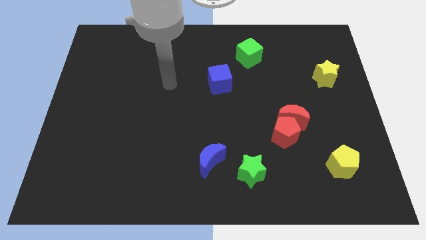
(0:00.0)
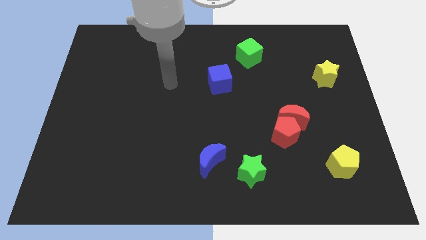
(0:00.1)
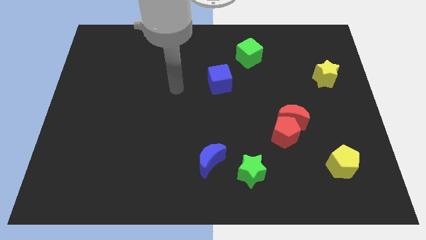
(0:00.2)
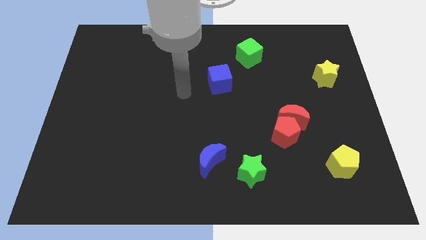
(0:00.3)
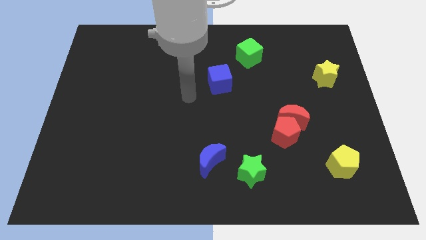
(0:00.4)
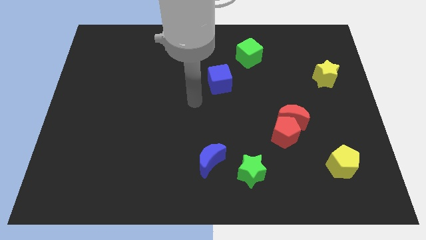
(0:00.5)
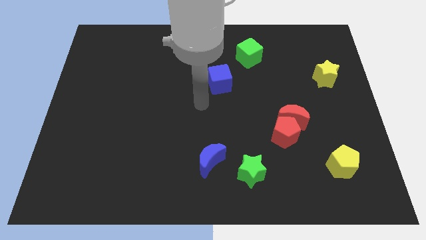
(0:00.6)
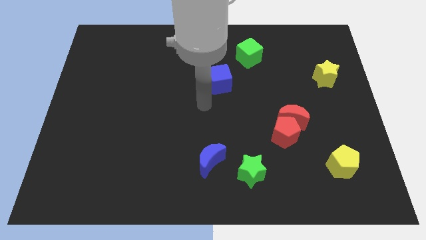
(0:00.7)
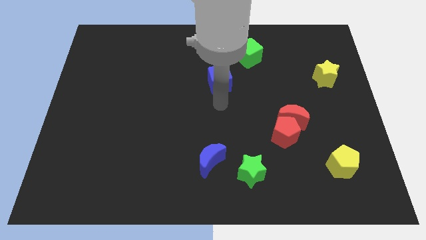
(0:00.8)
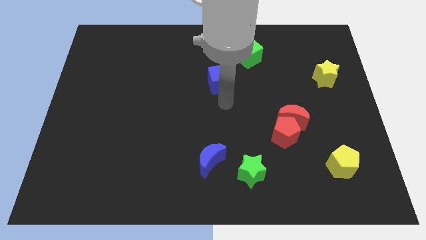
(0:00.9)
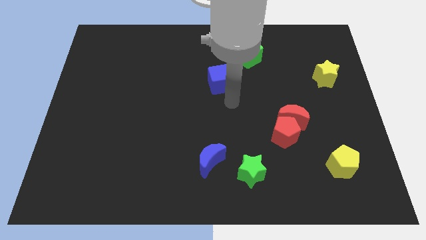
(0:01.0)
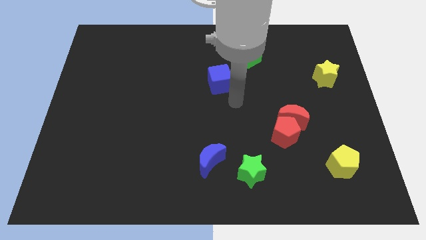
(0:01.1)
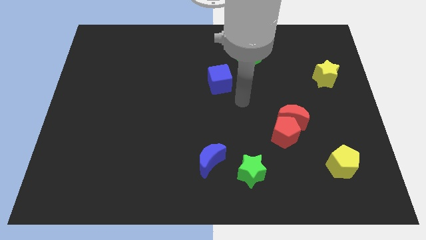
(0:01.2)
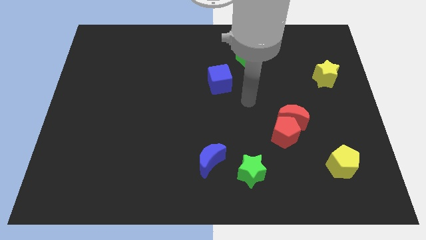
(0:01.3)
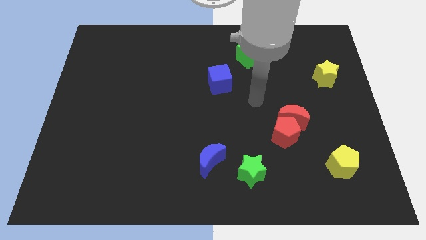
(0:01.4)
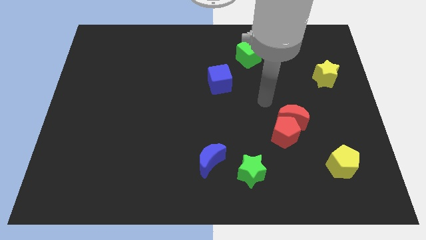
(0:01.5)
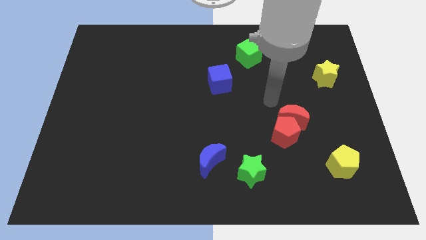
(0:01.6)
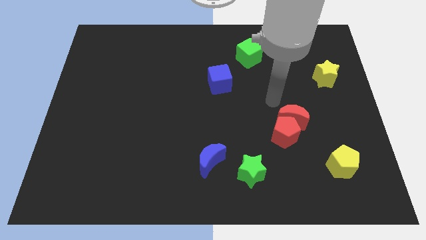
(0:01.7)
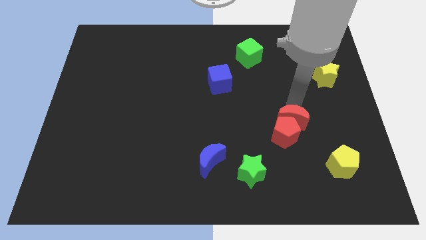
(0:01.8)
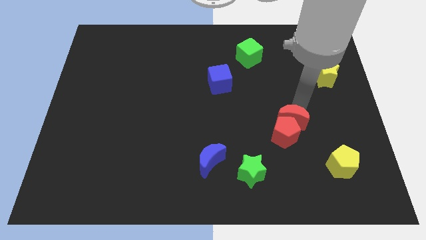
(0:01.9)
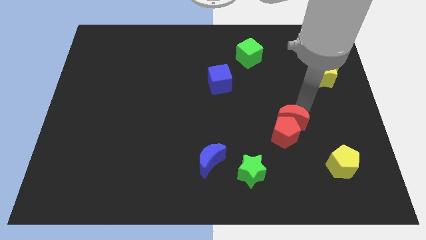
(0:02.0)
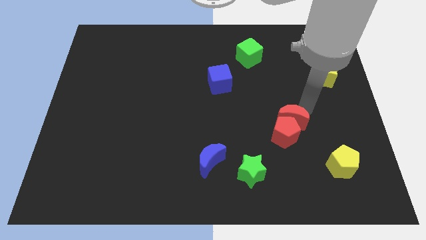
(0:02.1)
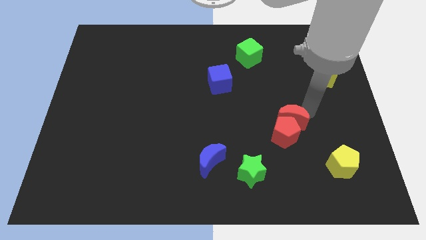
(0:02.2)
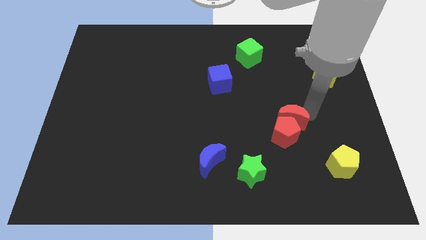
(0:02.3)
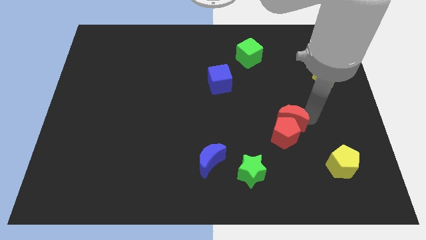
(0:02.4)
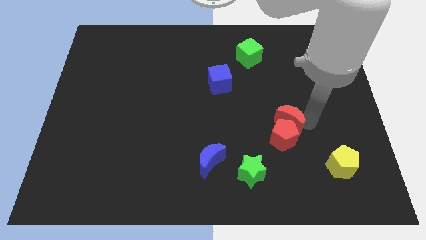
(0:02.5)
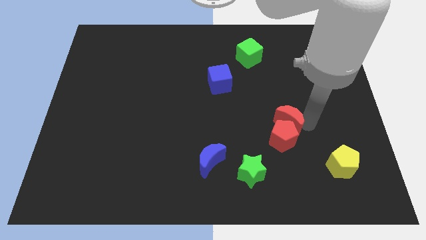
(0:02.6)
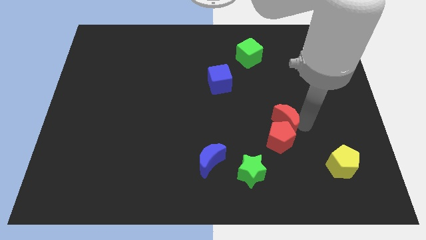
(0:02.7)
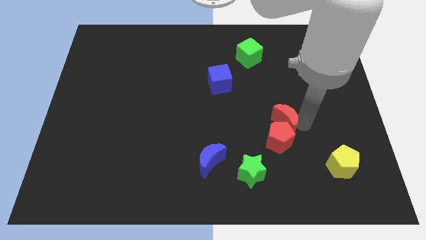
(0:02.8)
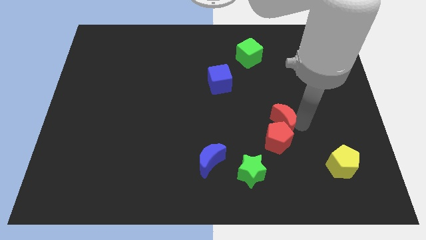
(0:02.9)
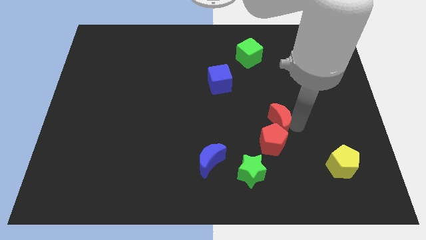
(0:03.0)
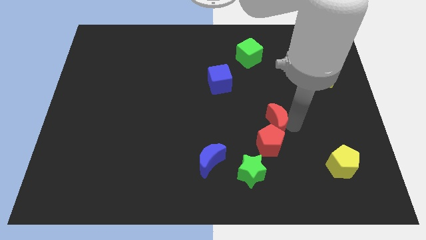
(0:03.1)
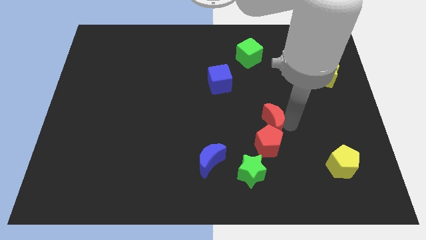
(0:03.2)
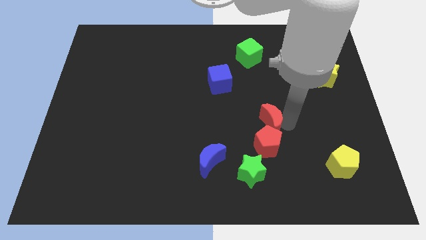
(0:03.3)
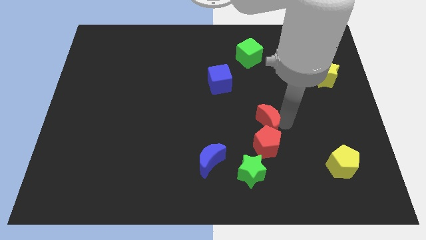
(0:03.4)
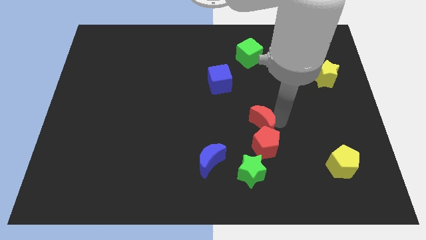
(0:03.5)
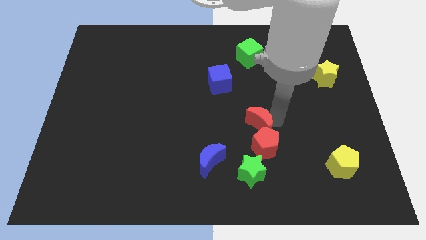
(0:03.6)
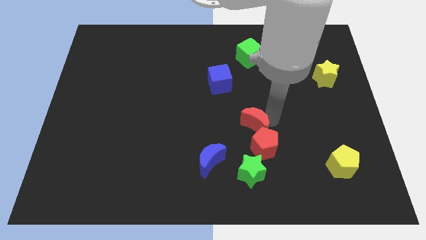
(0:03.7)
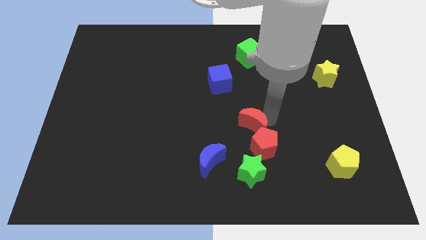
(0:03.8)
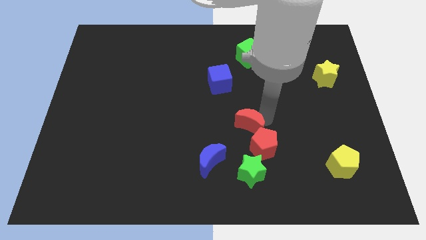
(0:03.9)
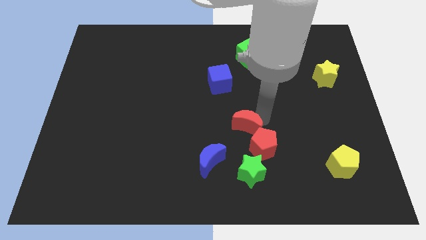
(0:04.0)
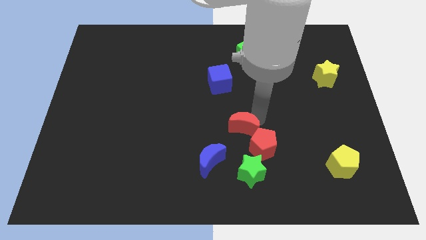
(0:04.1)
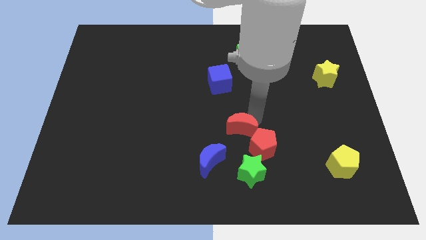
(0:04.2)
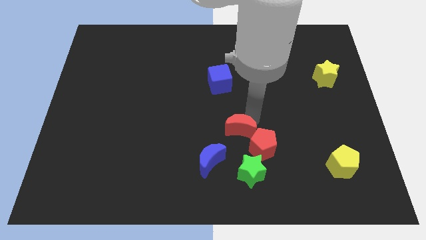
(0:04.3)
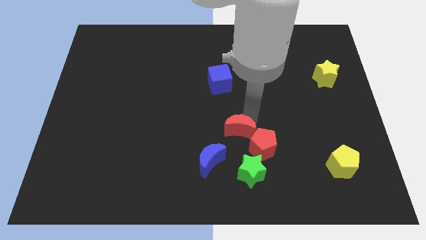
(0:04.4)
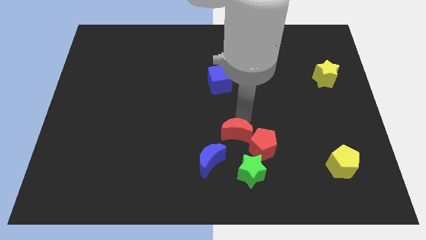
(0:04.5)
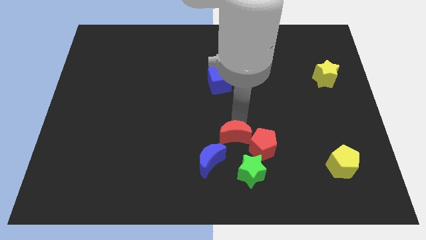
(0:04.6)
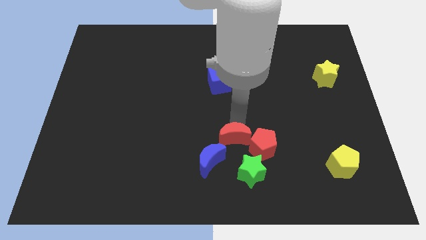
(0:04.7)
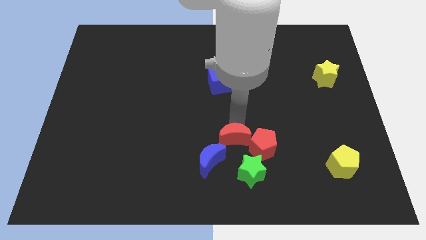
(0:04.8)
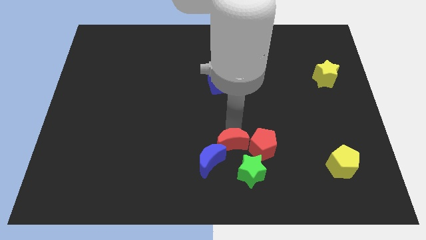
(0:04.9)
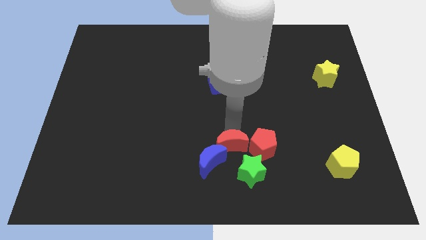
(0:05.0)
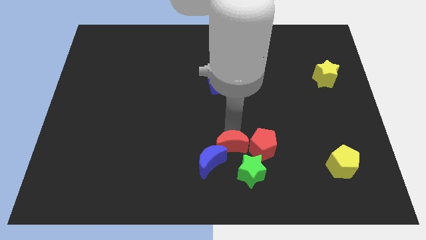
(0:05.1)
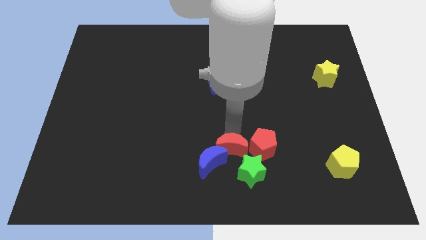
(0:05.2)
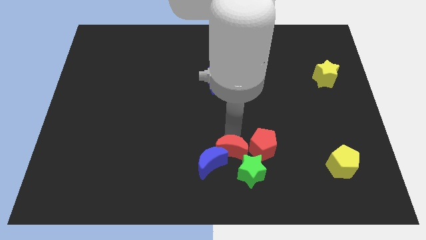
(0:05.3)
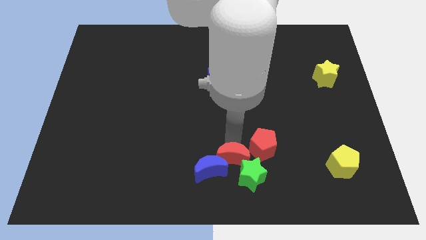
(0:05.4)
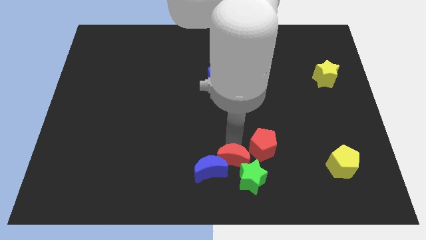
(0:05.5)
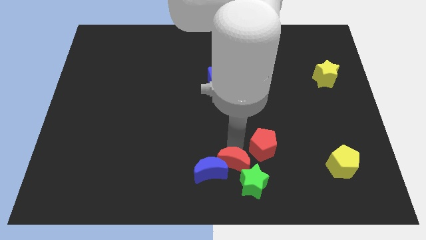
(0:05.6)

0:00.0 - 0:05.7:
move the red moon close to the green star

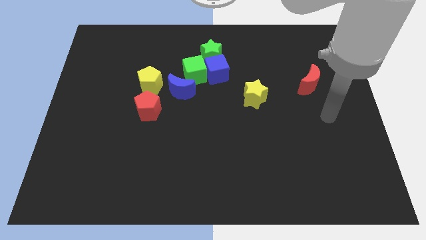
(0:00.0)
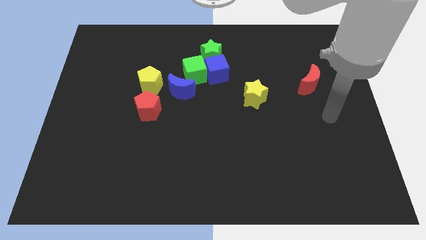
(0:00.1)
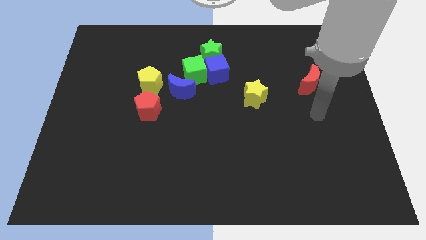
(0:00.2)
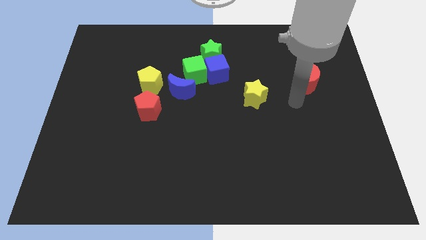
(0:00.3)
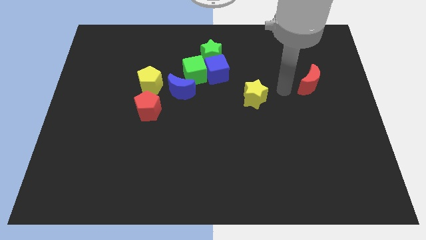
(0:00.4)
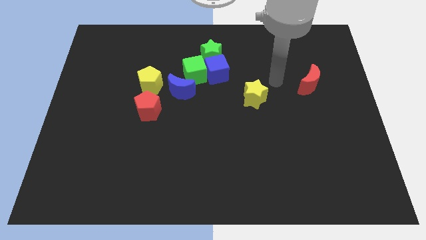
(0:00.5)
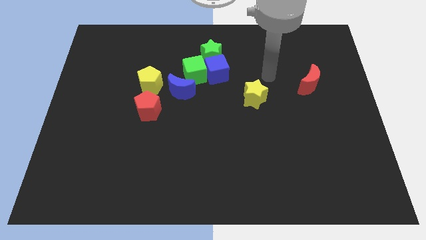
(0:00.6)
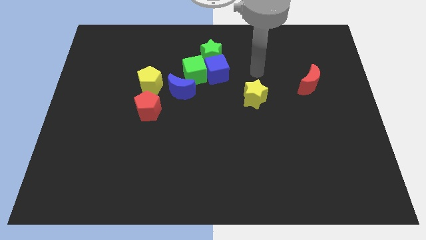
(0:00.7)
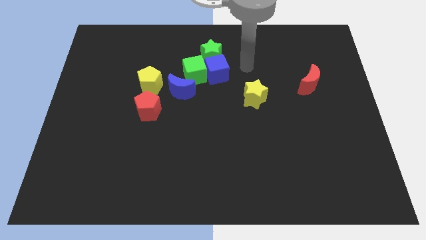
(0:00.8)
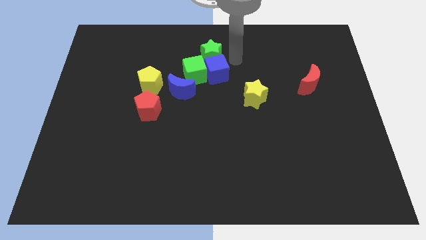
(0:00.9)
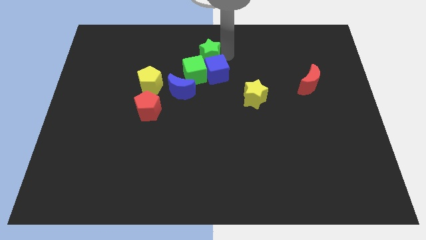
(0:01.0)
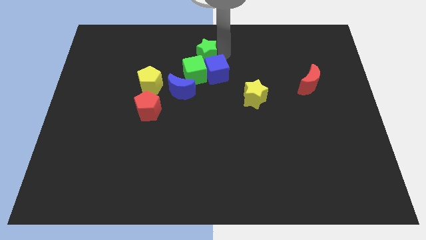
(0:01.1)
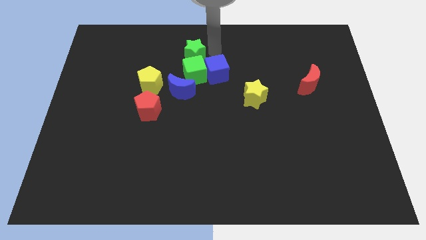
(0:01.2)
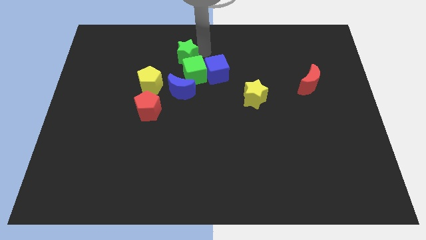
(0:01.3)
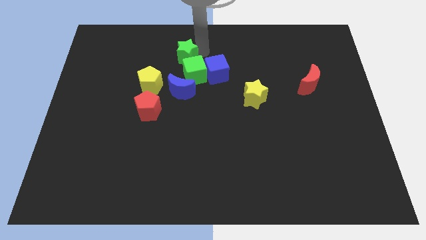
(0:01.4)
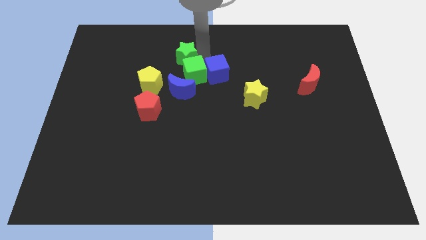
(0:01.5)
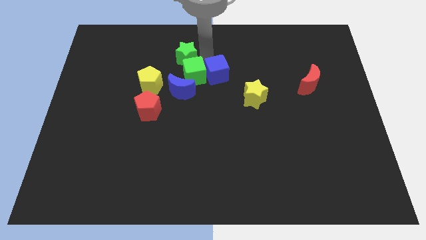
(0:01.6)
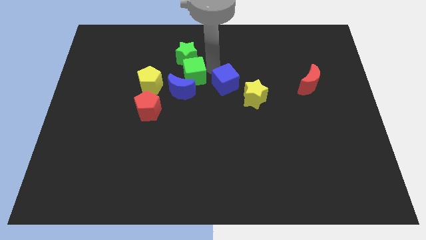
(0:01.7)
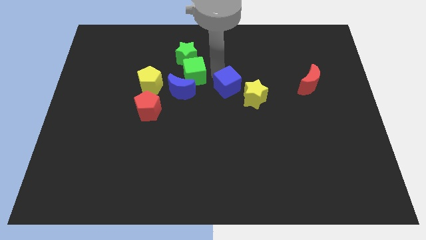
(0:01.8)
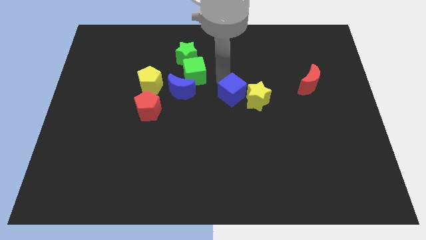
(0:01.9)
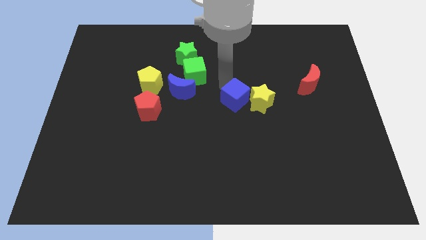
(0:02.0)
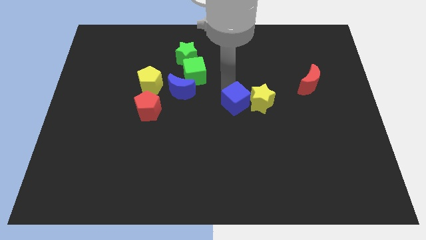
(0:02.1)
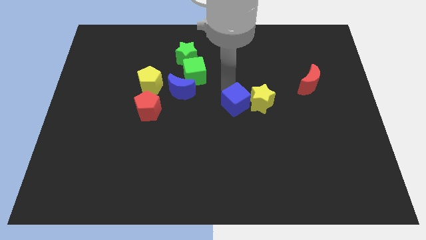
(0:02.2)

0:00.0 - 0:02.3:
slide the blue cube next to the yellow star

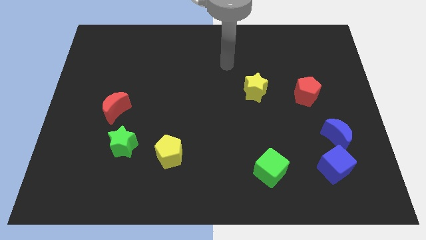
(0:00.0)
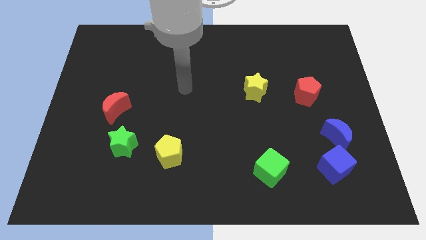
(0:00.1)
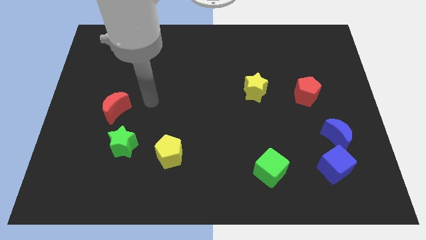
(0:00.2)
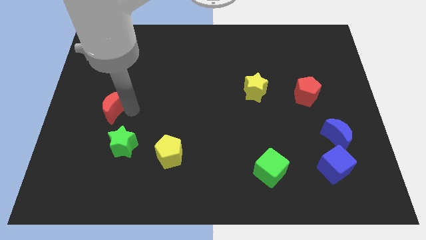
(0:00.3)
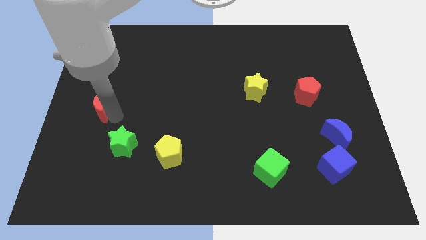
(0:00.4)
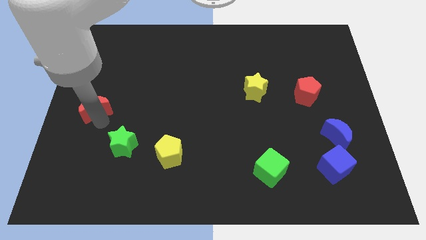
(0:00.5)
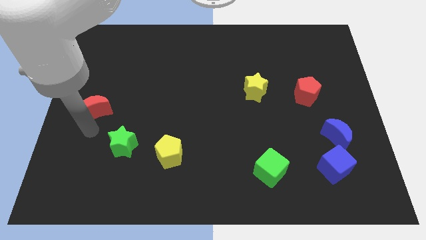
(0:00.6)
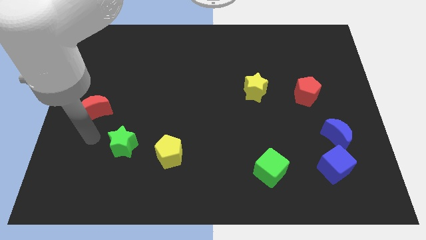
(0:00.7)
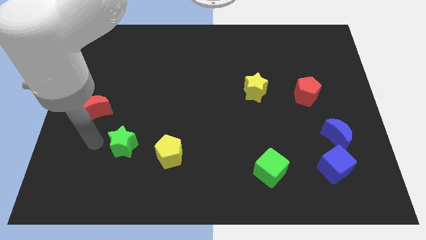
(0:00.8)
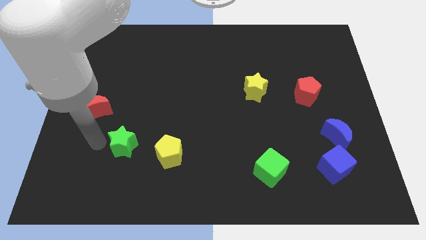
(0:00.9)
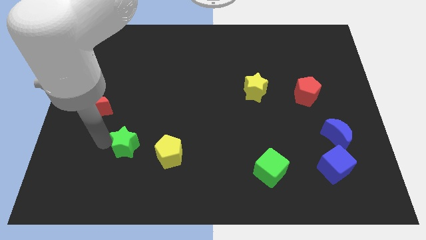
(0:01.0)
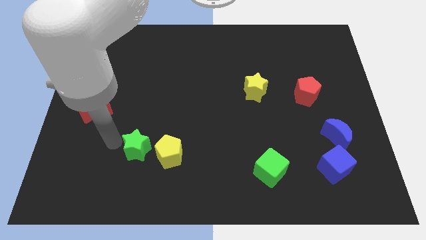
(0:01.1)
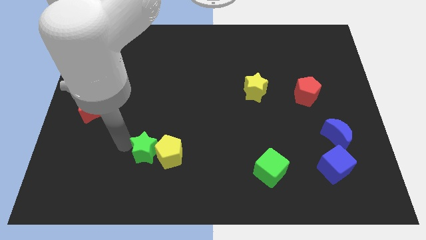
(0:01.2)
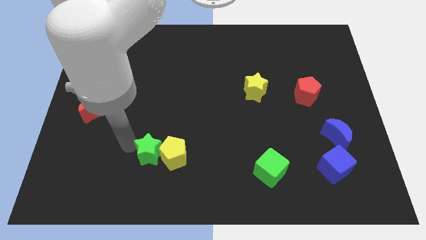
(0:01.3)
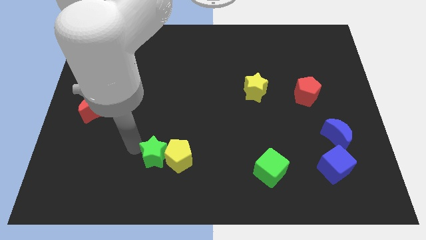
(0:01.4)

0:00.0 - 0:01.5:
put the green star towards the yellow pentagon
